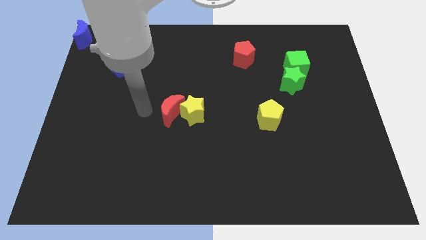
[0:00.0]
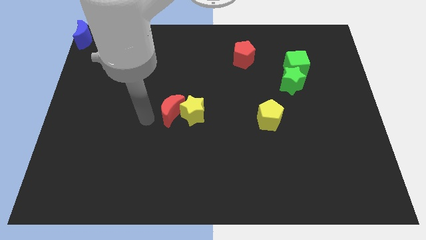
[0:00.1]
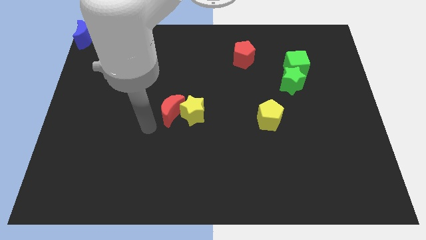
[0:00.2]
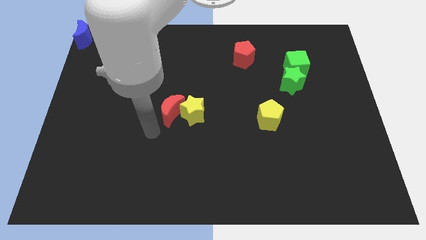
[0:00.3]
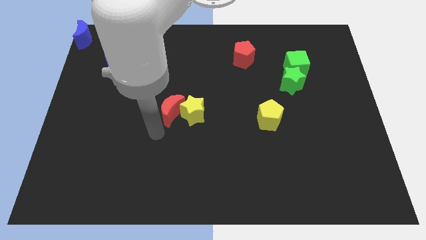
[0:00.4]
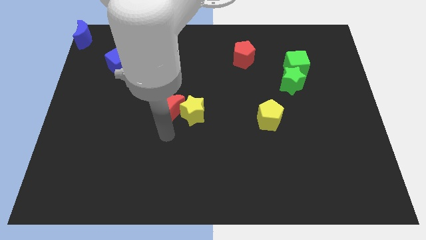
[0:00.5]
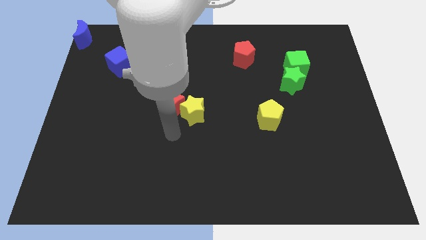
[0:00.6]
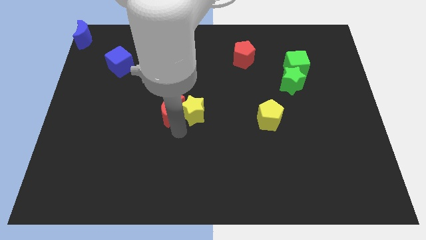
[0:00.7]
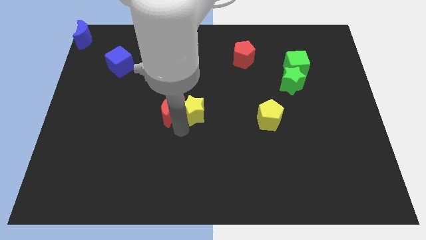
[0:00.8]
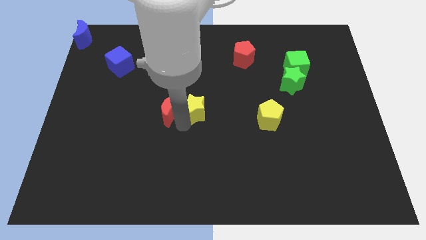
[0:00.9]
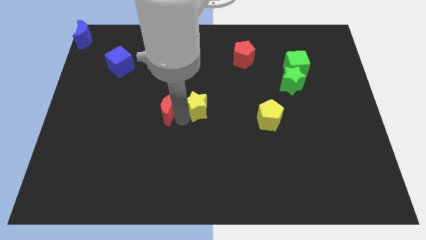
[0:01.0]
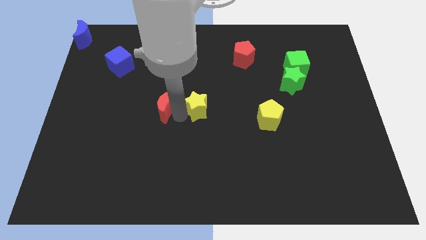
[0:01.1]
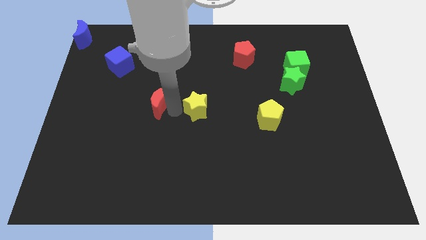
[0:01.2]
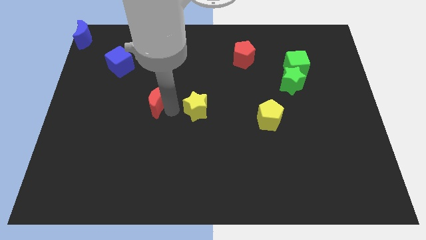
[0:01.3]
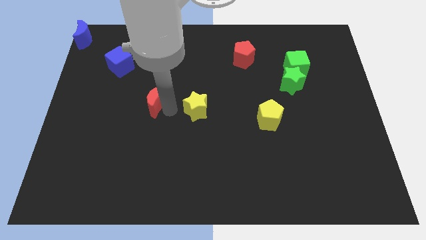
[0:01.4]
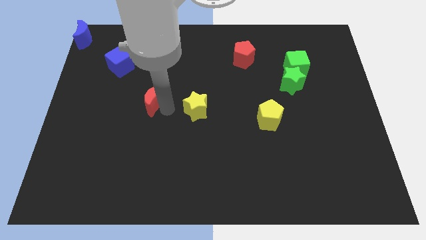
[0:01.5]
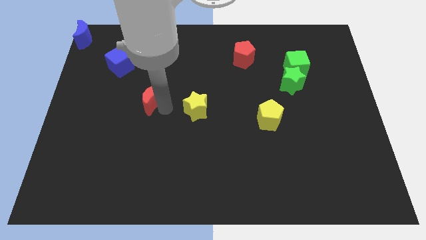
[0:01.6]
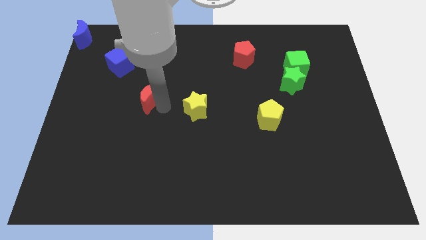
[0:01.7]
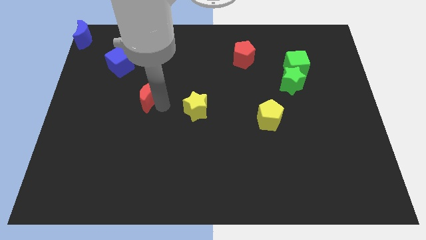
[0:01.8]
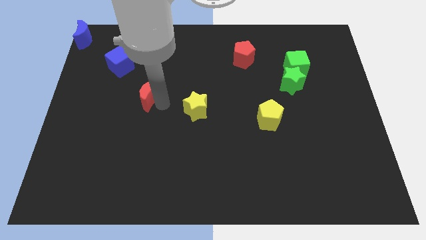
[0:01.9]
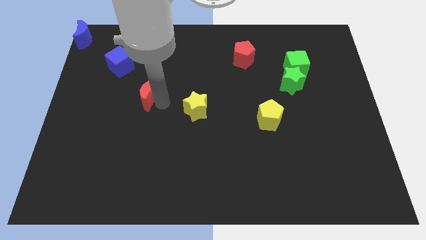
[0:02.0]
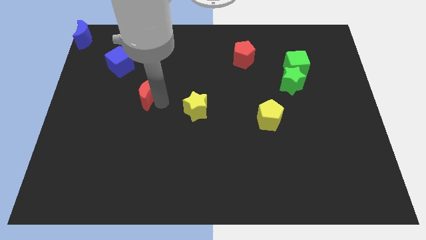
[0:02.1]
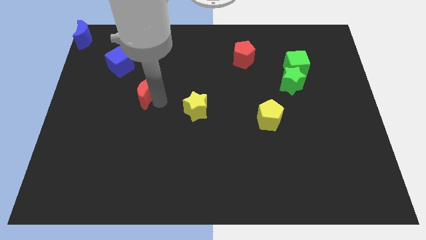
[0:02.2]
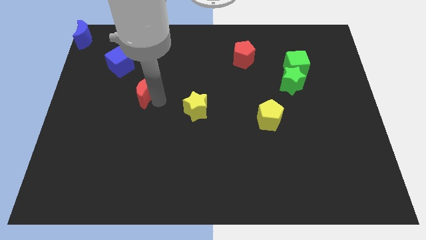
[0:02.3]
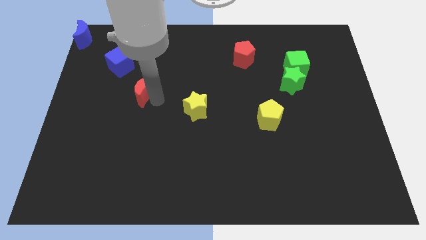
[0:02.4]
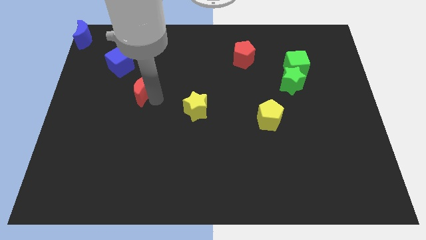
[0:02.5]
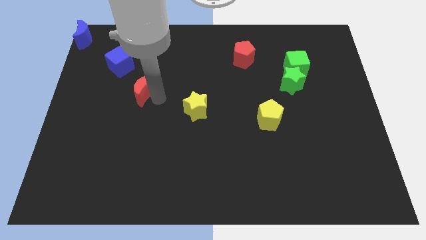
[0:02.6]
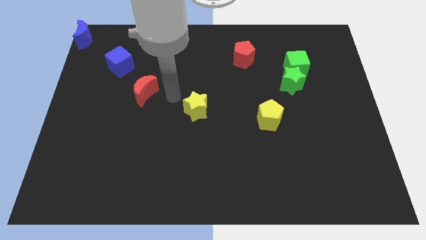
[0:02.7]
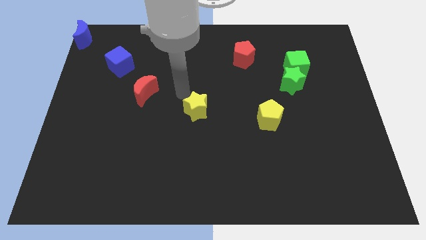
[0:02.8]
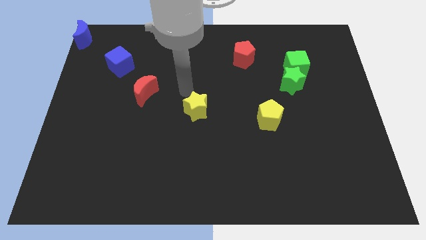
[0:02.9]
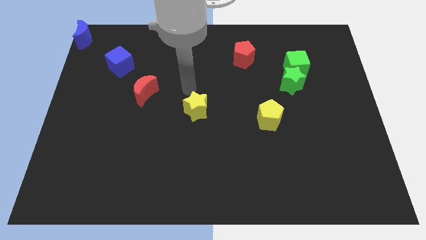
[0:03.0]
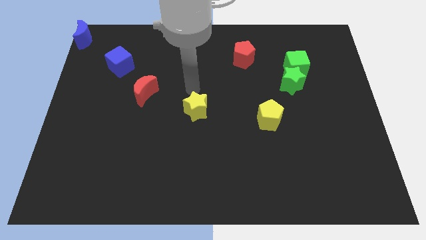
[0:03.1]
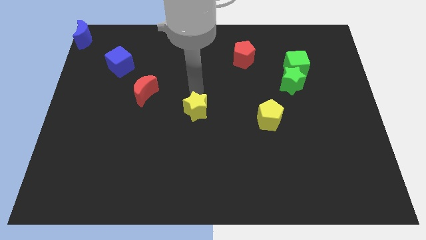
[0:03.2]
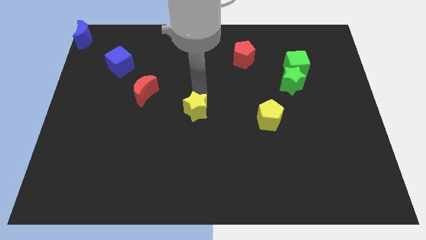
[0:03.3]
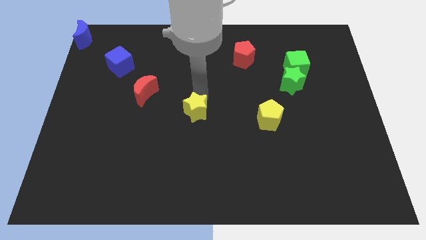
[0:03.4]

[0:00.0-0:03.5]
separate the red crescent from the yellow star

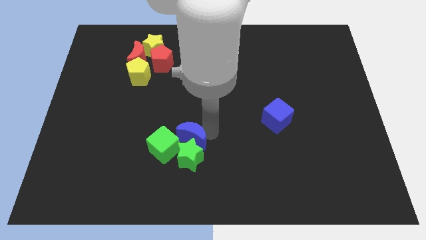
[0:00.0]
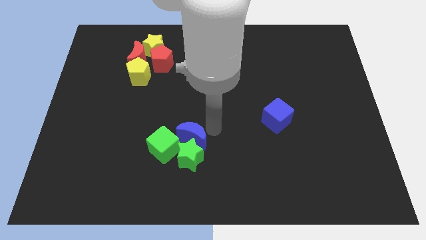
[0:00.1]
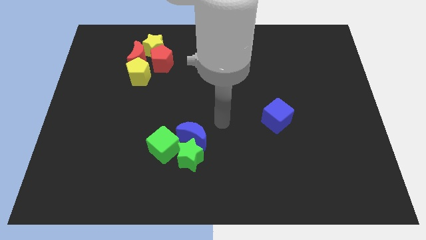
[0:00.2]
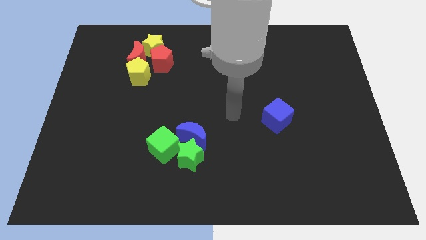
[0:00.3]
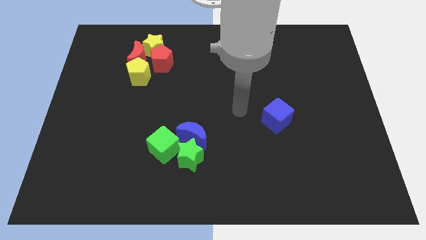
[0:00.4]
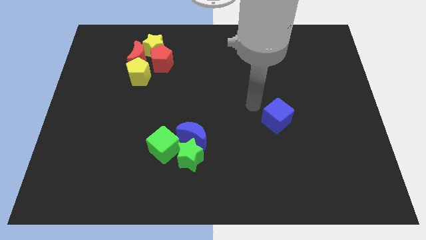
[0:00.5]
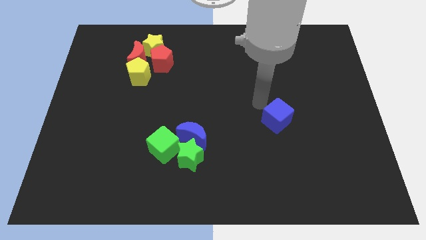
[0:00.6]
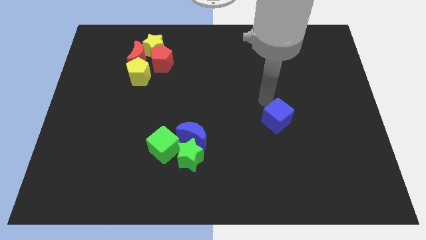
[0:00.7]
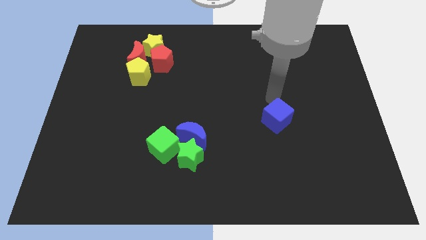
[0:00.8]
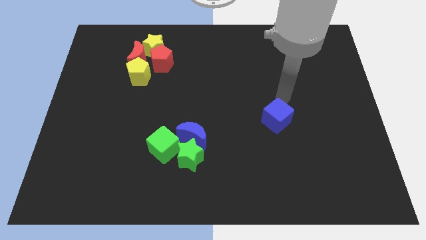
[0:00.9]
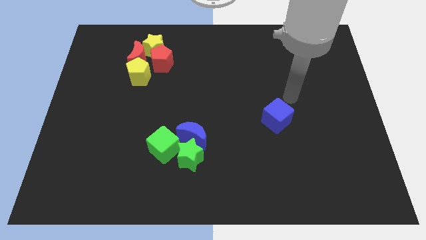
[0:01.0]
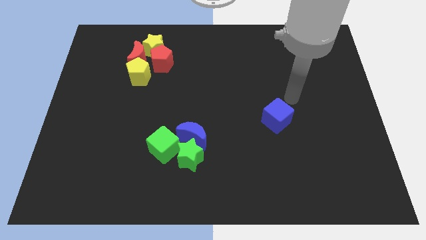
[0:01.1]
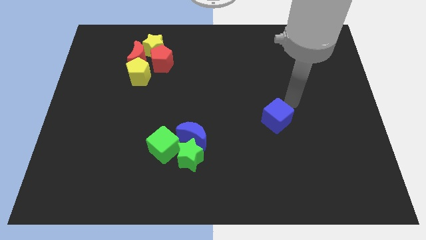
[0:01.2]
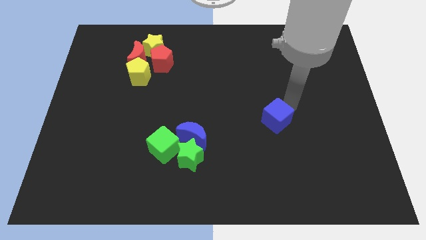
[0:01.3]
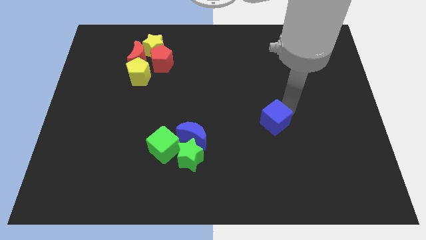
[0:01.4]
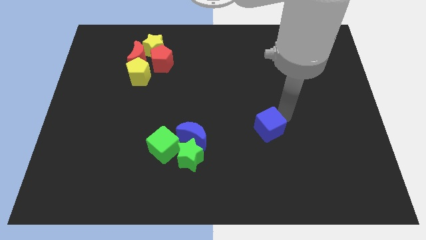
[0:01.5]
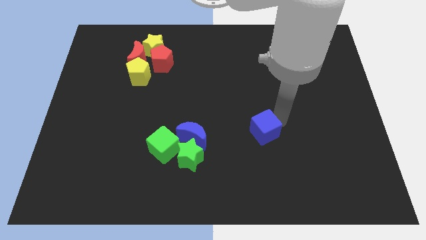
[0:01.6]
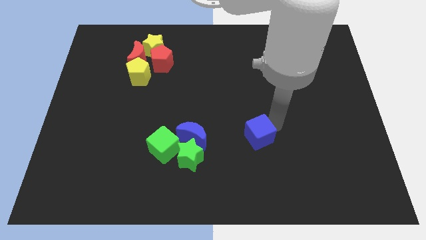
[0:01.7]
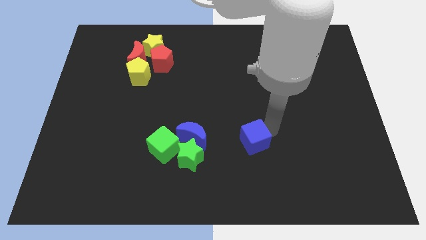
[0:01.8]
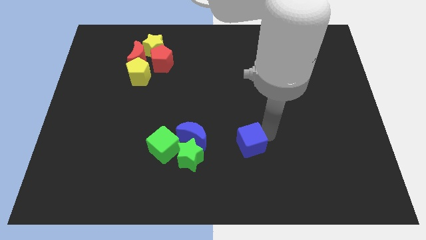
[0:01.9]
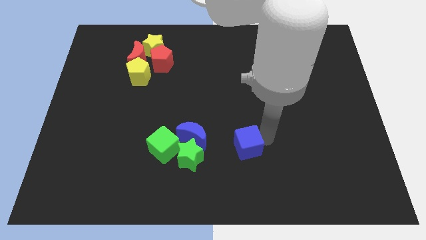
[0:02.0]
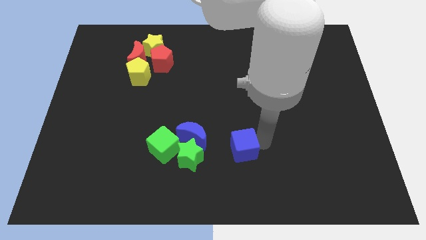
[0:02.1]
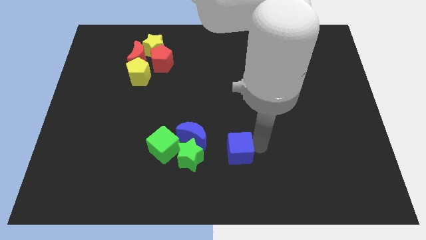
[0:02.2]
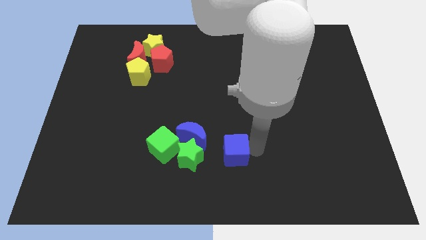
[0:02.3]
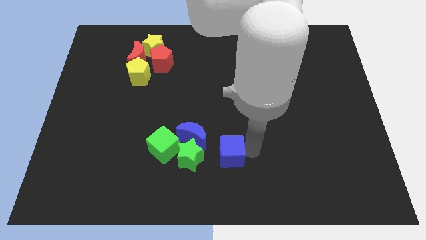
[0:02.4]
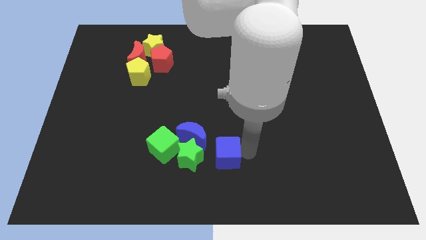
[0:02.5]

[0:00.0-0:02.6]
push blue cube towards group of blocks

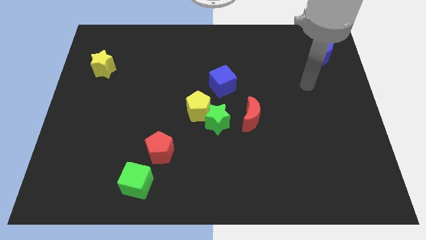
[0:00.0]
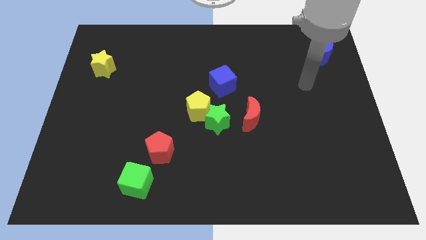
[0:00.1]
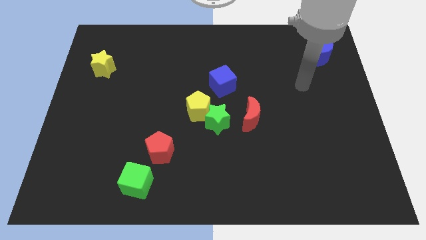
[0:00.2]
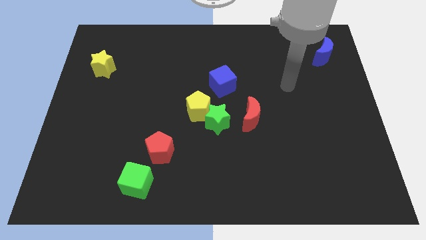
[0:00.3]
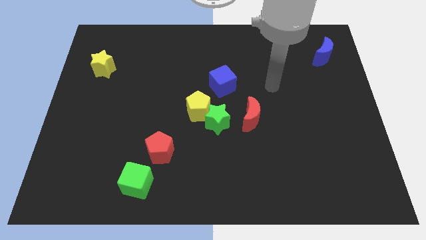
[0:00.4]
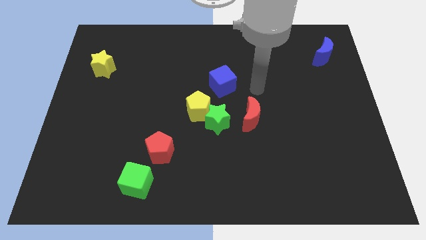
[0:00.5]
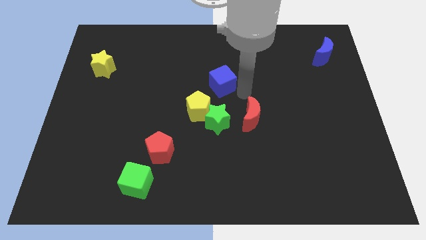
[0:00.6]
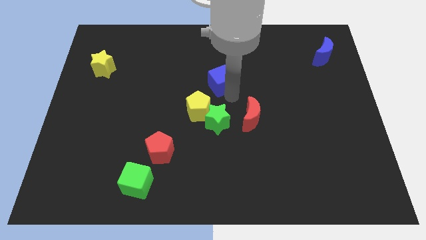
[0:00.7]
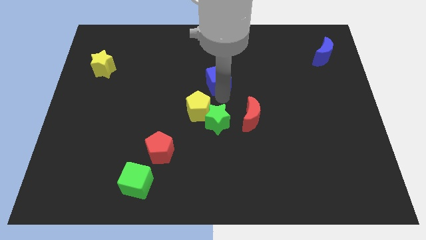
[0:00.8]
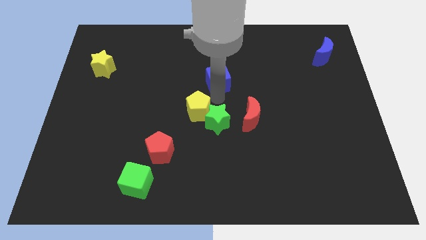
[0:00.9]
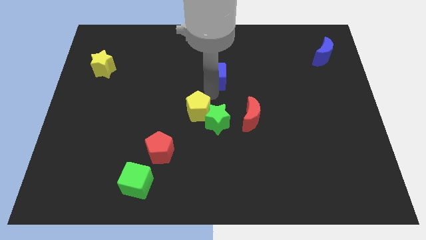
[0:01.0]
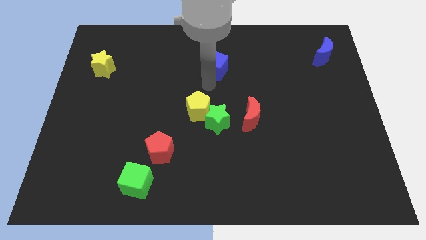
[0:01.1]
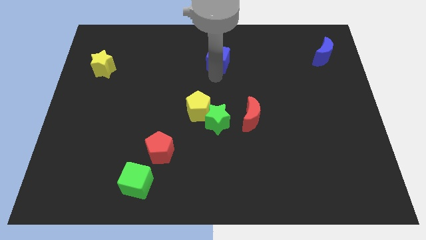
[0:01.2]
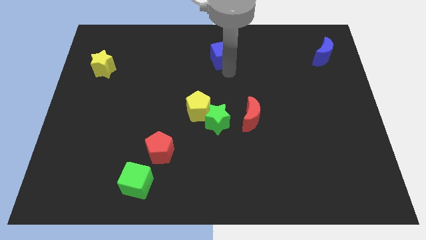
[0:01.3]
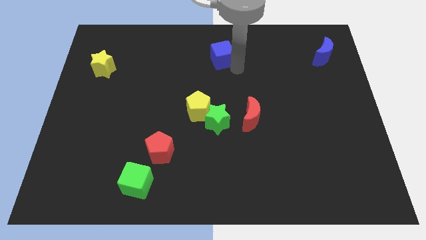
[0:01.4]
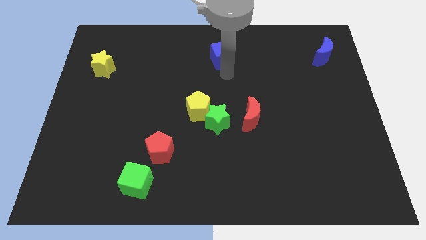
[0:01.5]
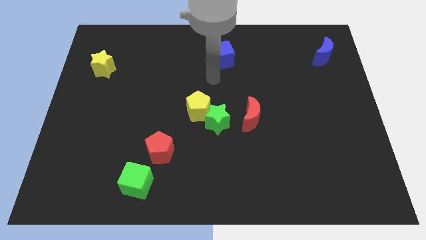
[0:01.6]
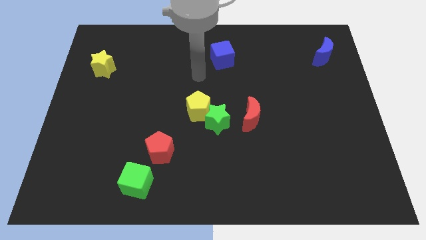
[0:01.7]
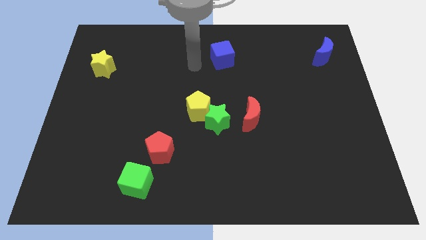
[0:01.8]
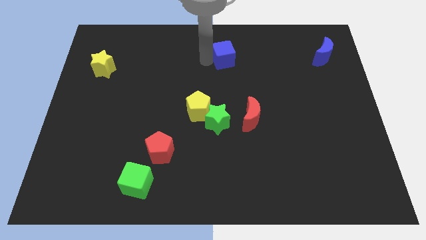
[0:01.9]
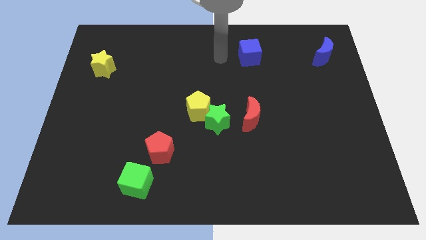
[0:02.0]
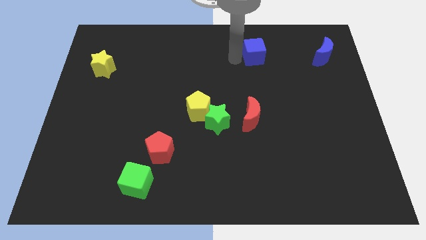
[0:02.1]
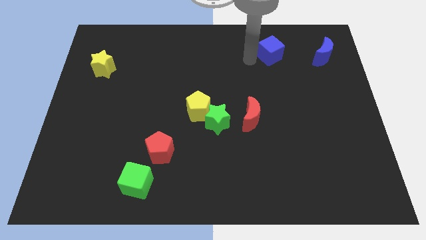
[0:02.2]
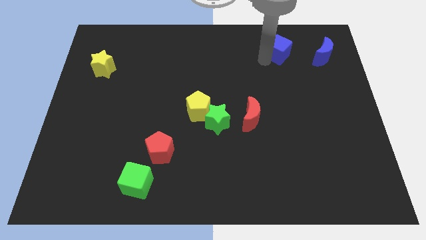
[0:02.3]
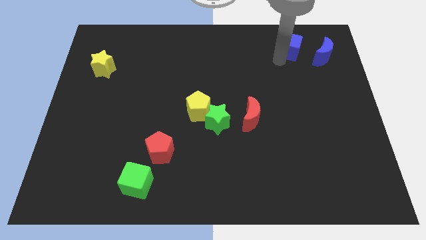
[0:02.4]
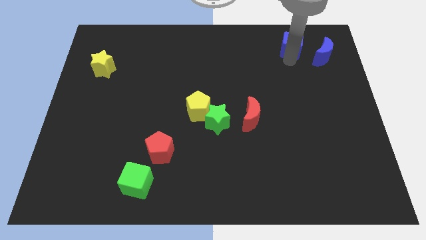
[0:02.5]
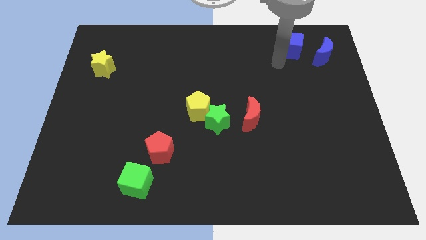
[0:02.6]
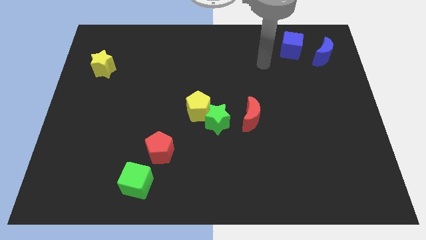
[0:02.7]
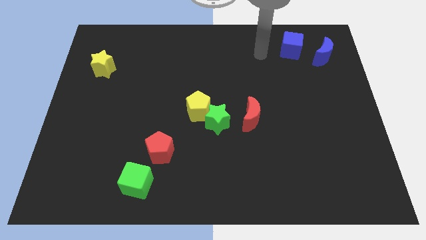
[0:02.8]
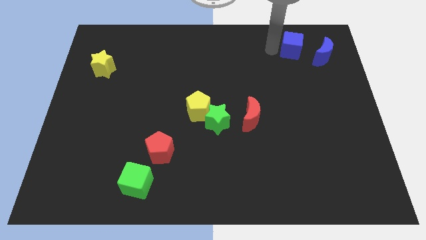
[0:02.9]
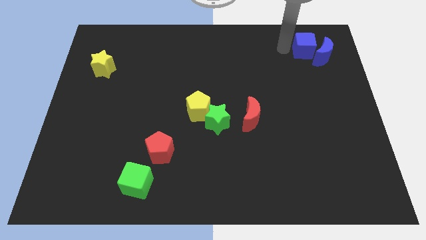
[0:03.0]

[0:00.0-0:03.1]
place blue cube to the left of blue moon
